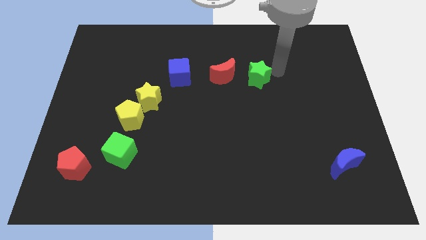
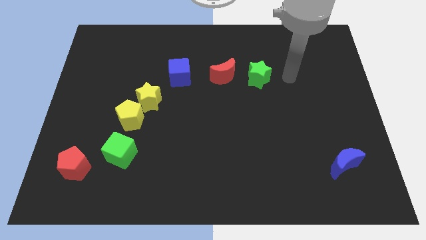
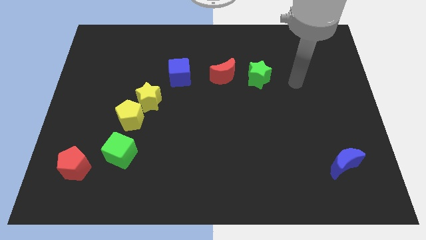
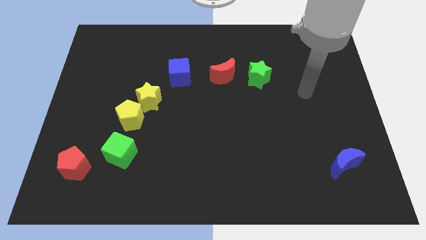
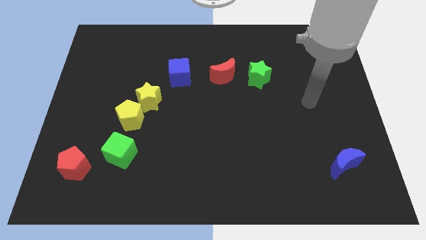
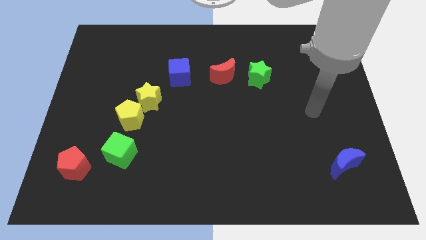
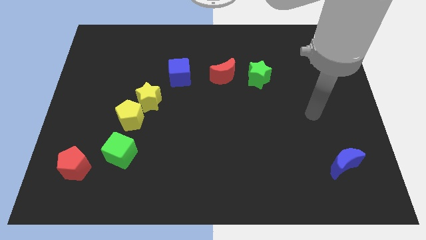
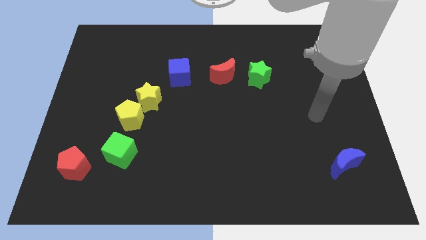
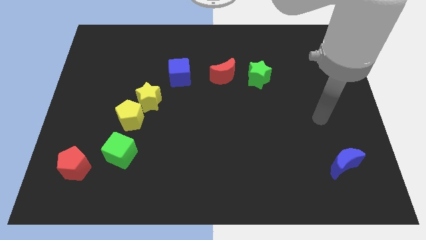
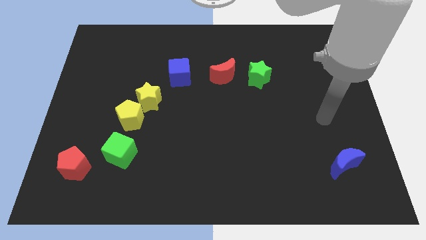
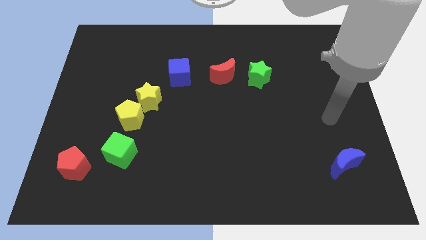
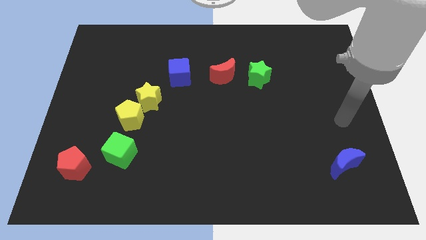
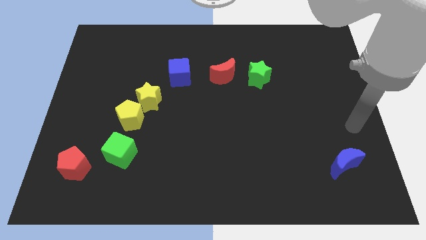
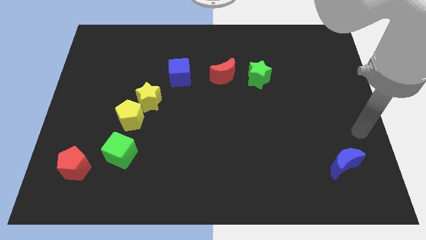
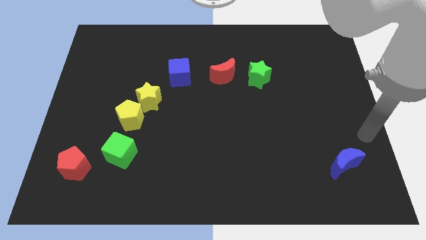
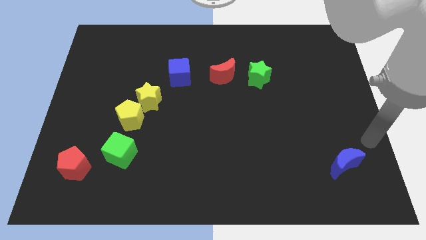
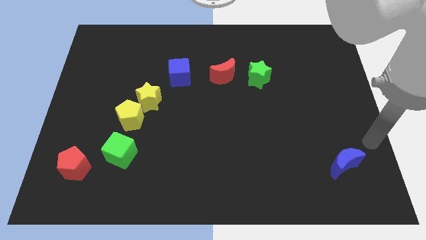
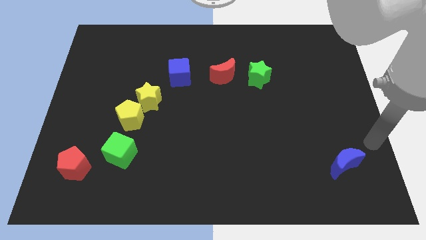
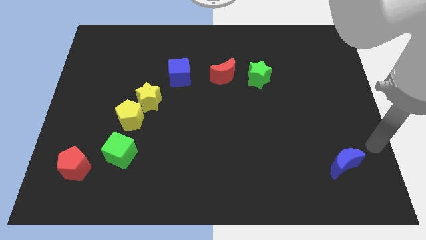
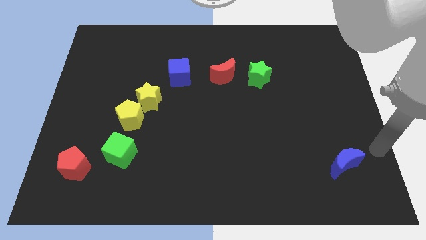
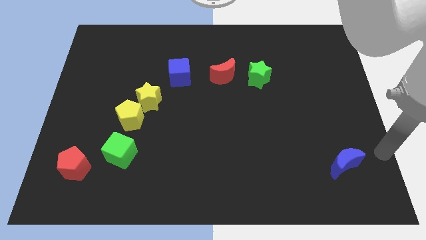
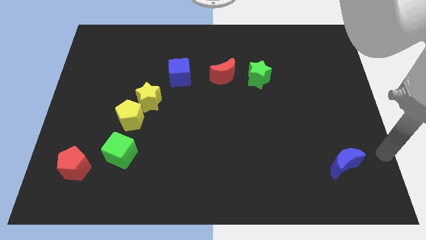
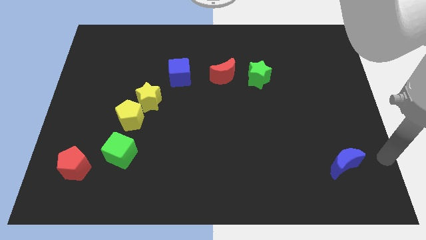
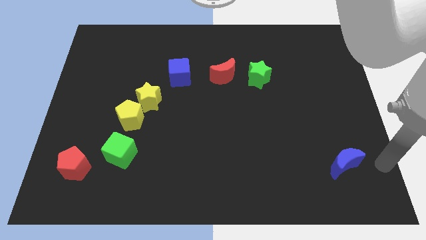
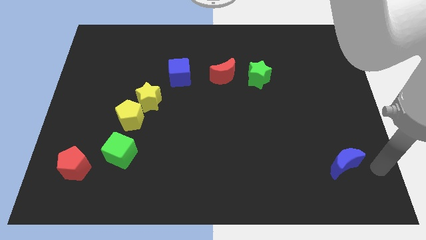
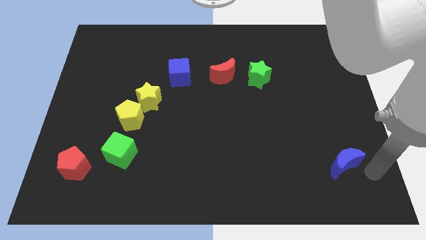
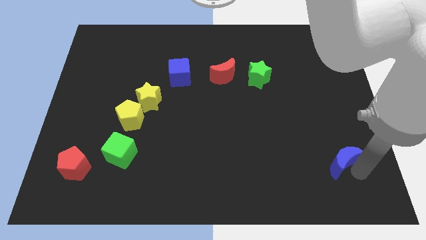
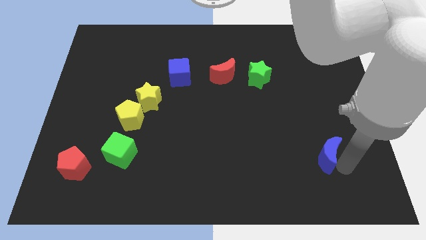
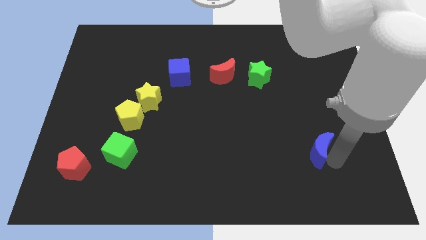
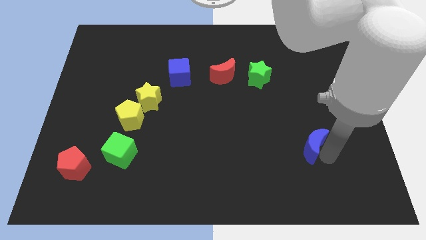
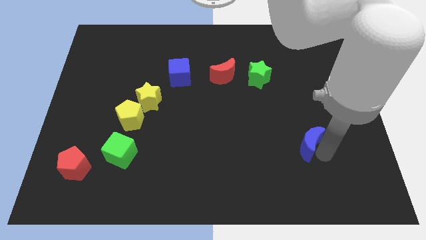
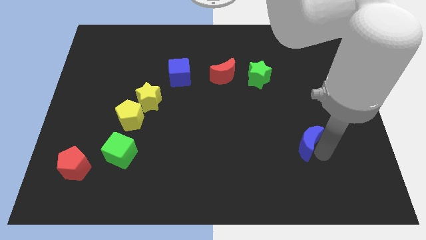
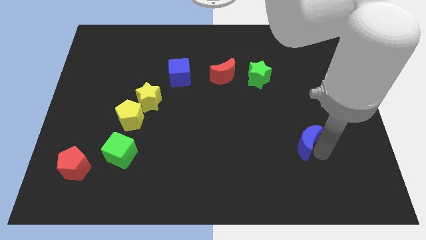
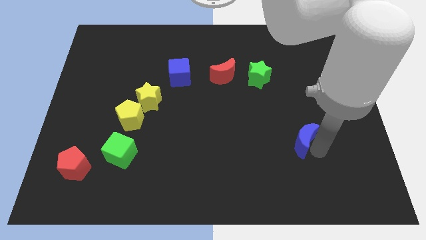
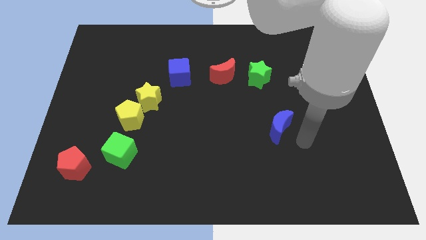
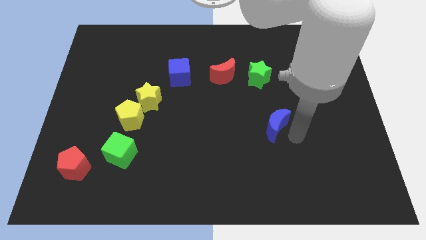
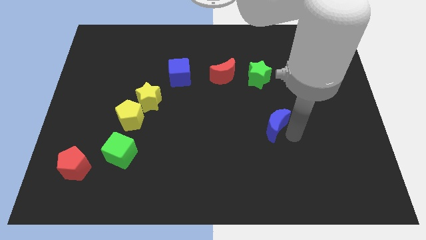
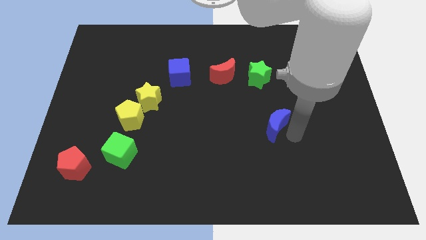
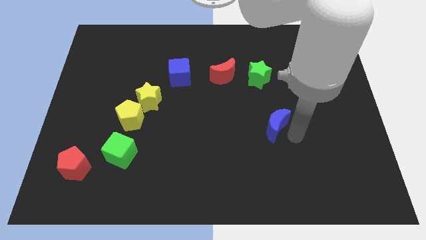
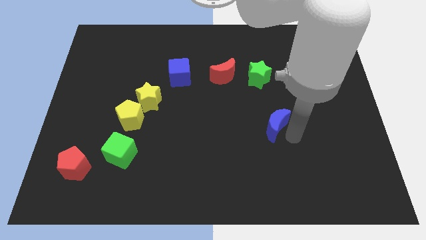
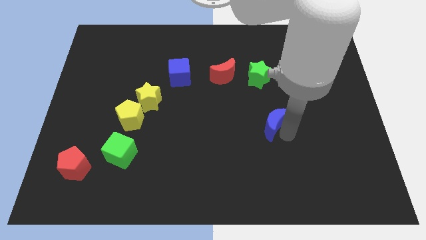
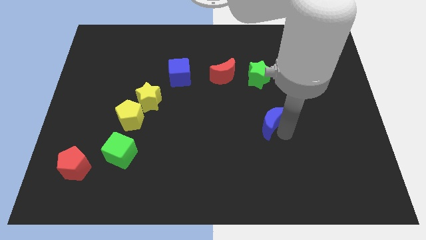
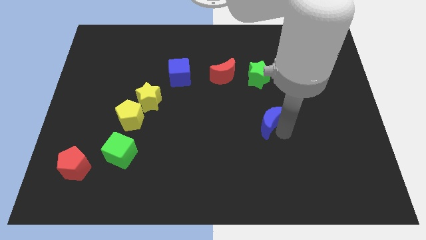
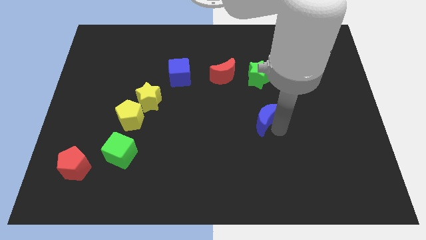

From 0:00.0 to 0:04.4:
push the blue moon to the center

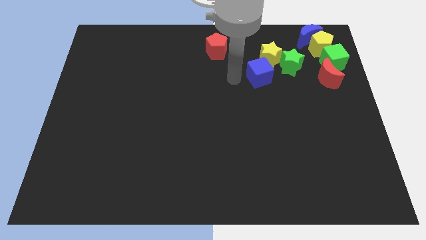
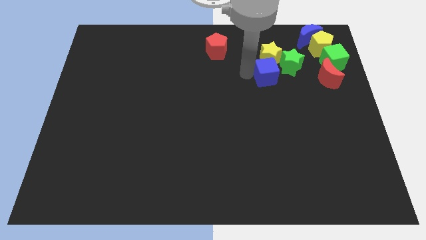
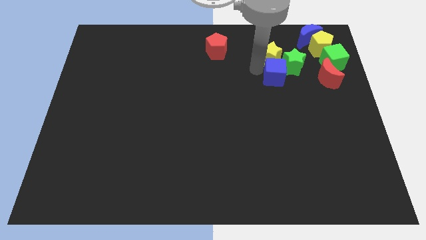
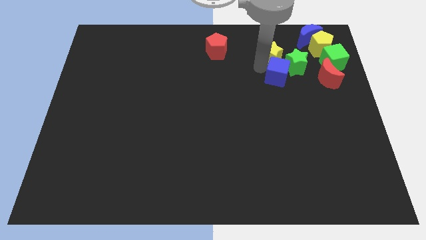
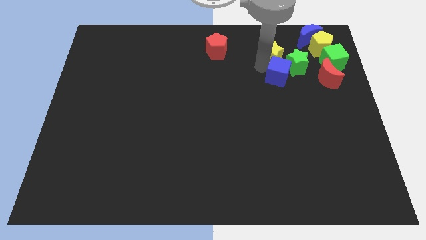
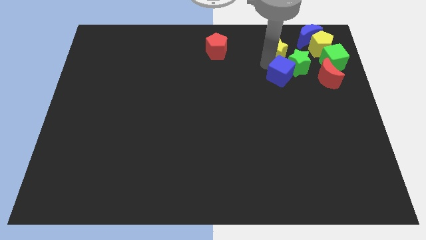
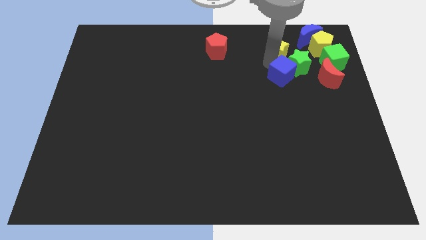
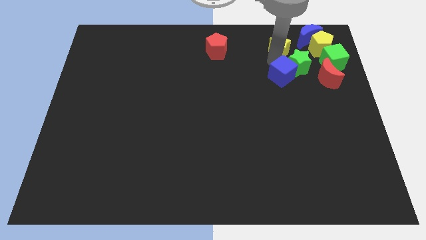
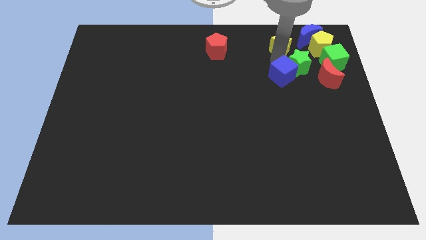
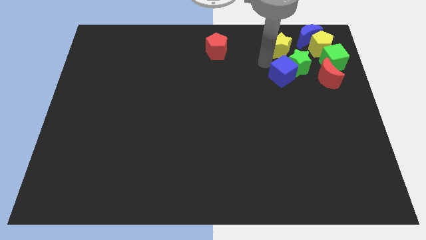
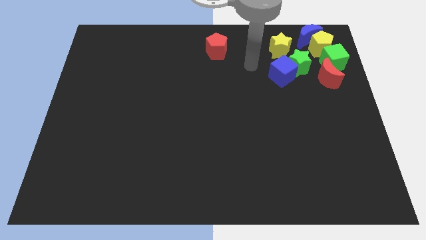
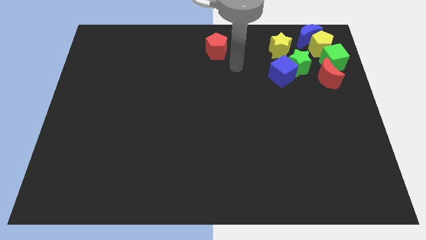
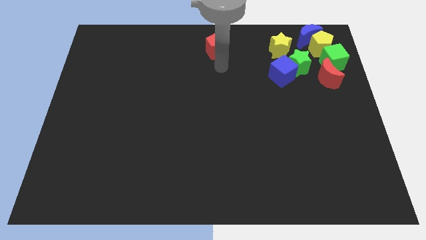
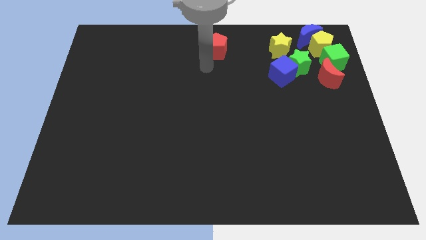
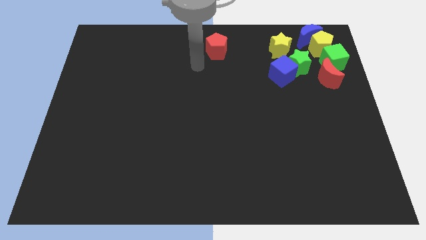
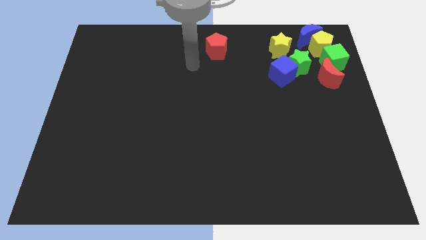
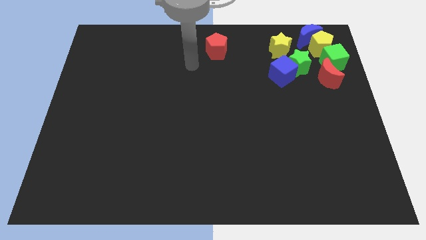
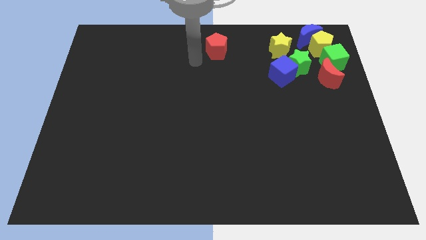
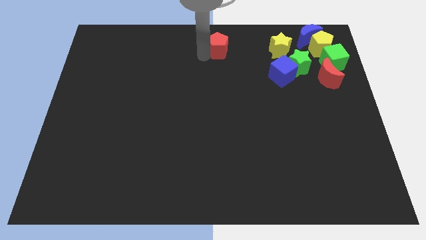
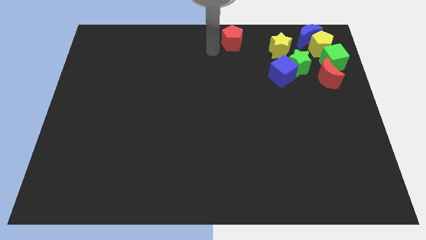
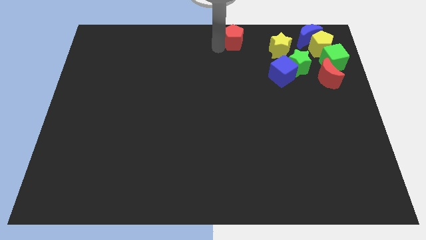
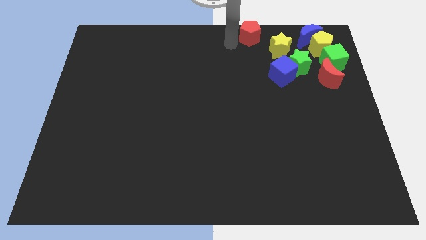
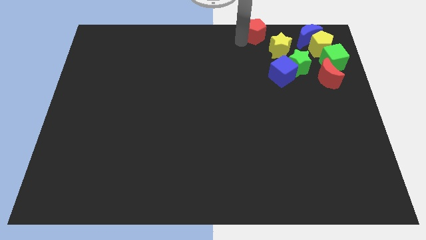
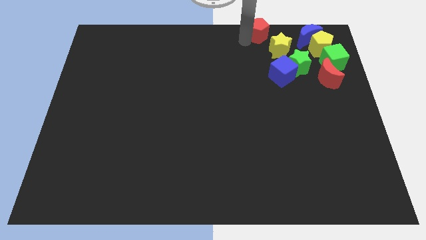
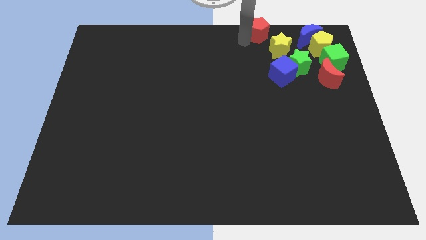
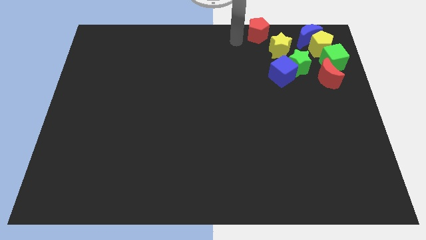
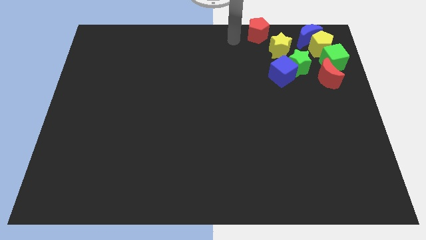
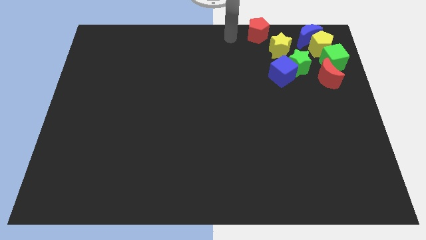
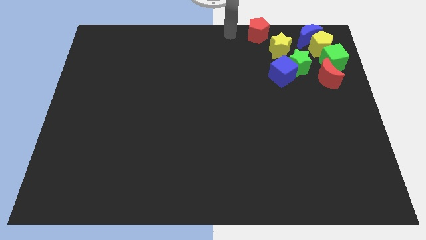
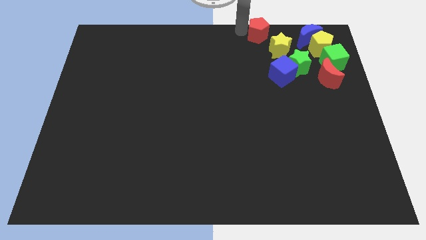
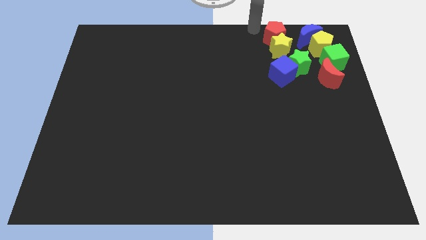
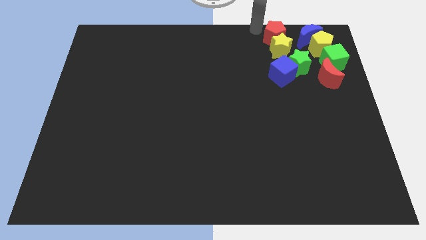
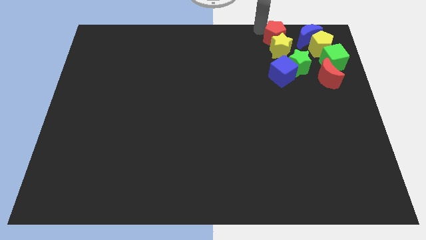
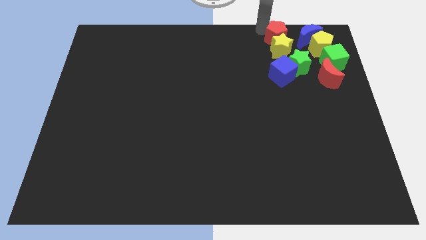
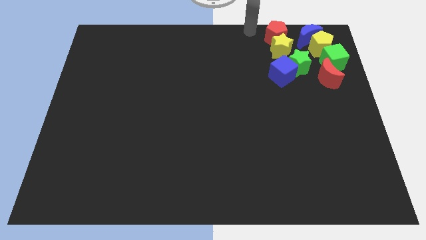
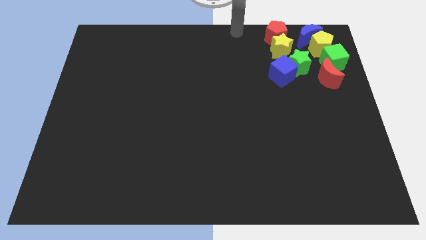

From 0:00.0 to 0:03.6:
move red pentagon above to the yellow star

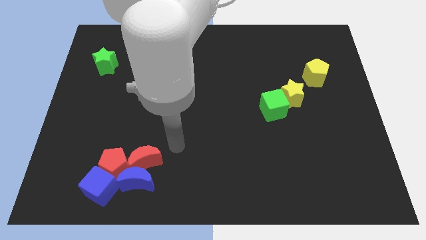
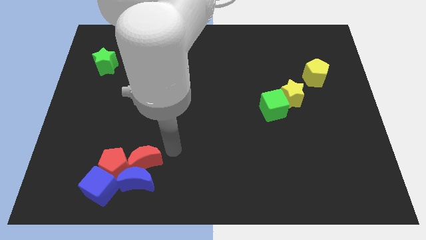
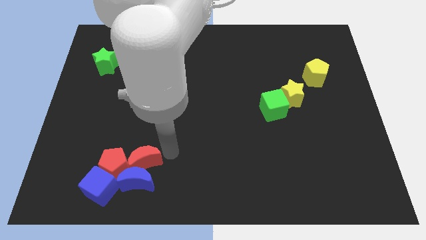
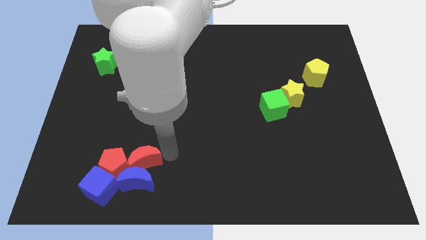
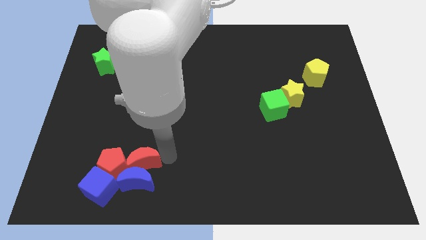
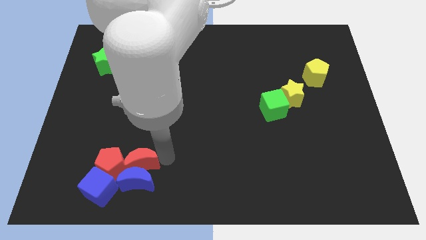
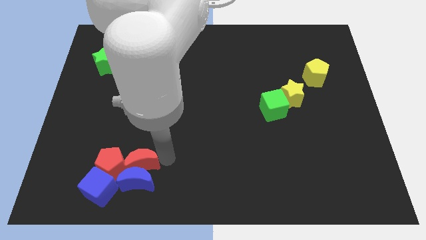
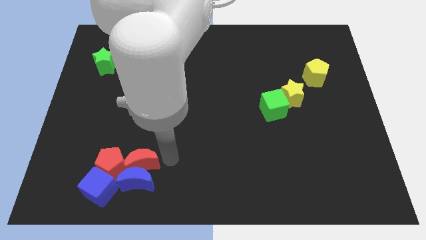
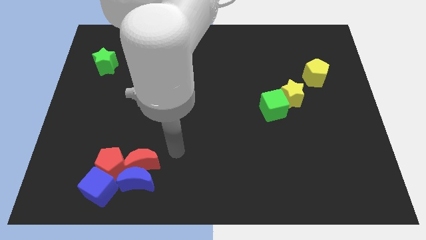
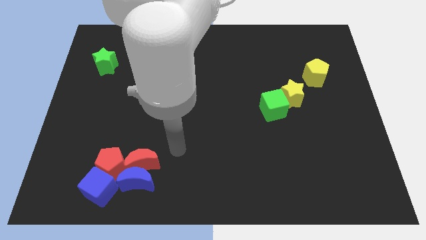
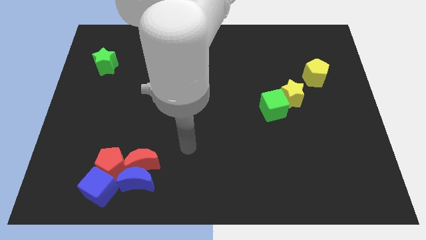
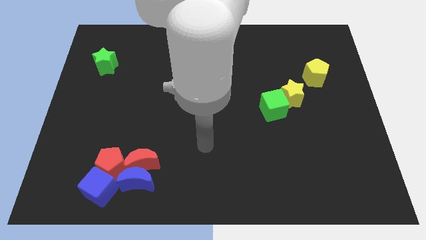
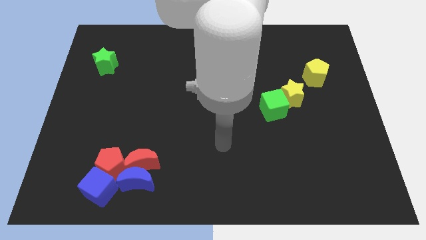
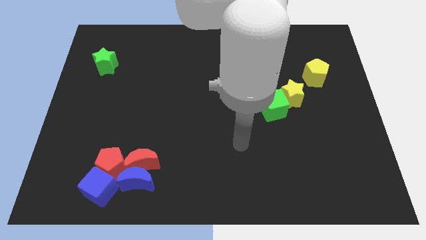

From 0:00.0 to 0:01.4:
move your arm away from the blocks
